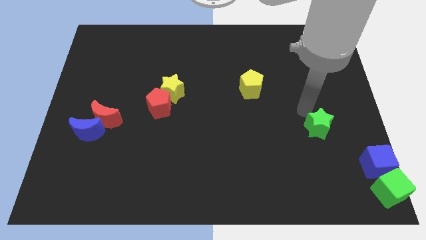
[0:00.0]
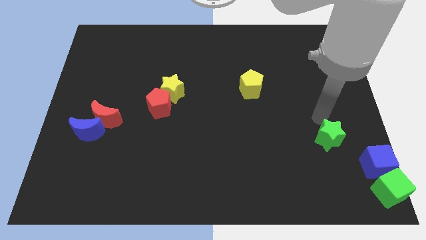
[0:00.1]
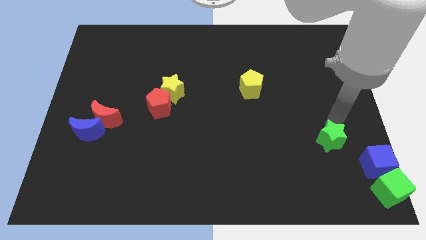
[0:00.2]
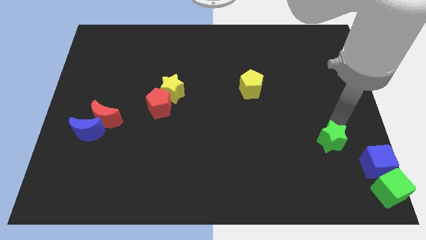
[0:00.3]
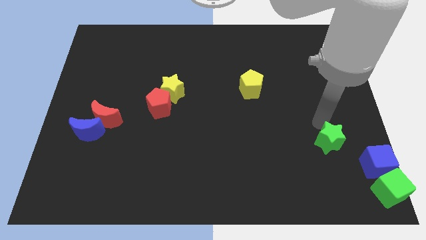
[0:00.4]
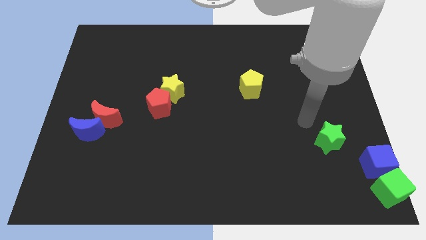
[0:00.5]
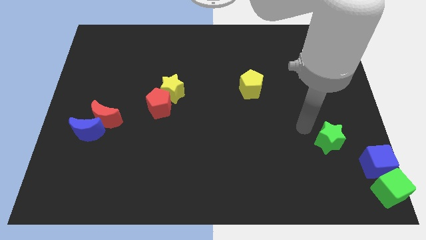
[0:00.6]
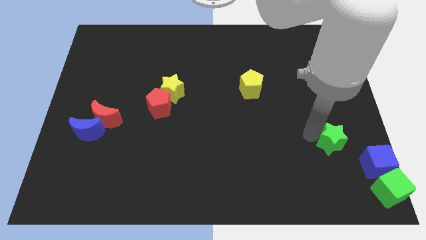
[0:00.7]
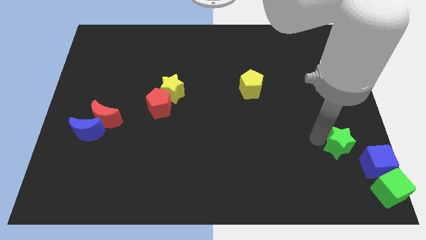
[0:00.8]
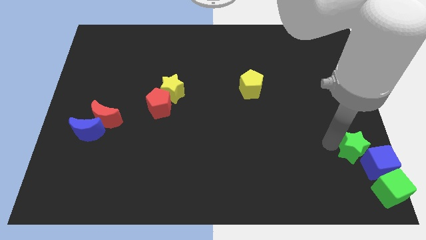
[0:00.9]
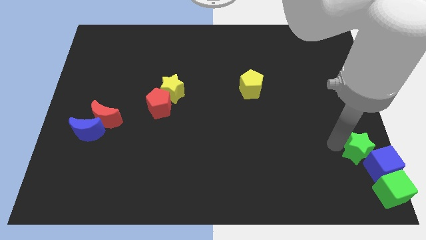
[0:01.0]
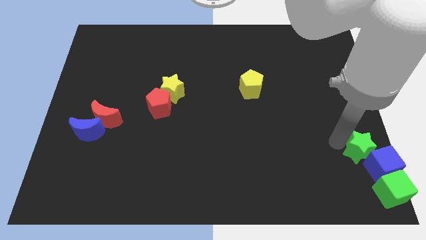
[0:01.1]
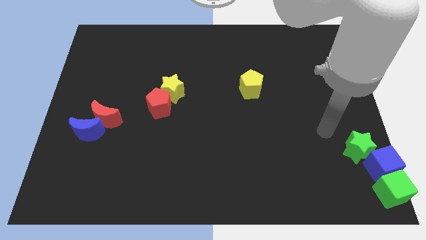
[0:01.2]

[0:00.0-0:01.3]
push the green star to the top left of the blue cube

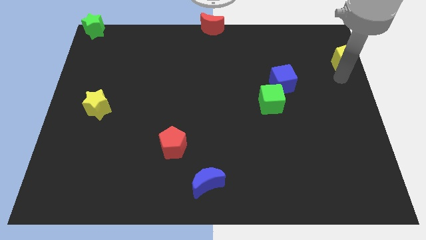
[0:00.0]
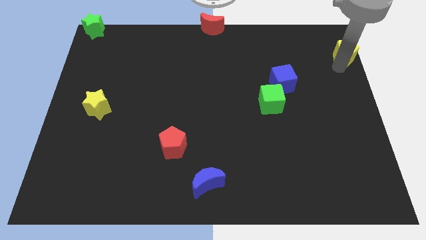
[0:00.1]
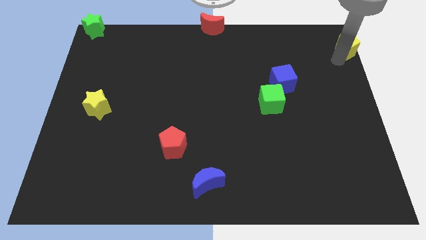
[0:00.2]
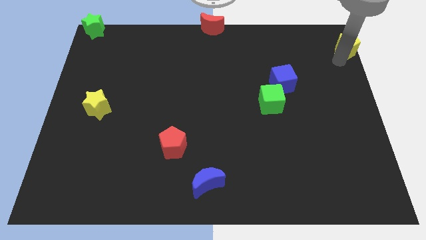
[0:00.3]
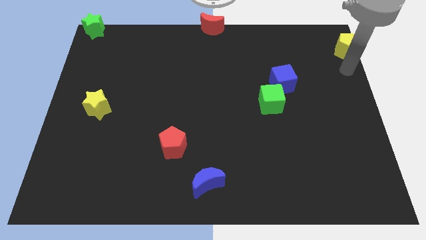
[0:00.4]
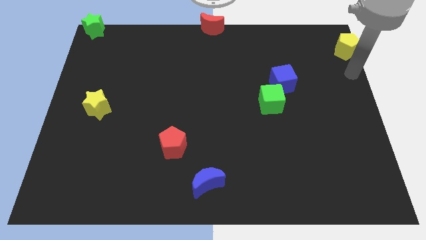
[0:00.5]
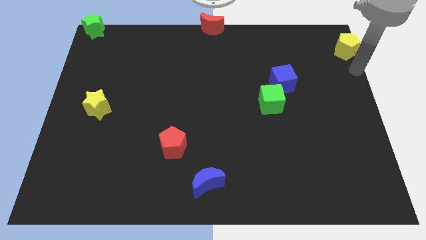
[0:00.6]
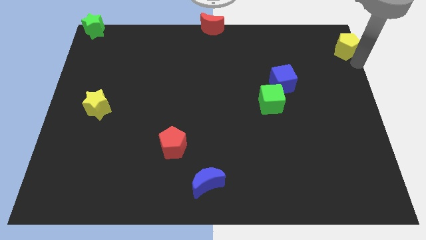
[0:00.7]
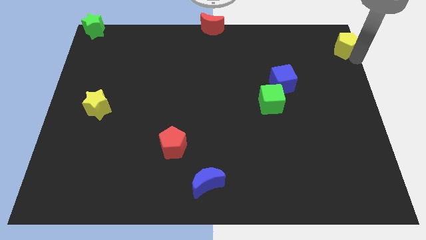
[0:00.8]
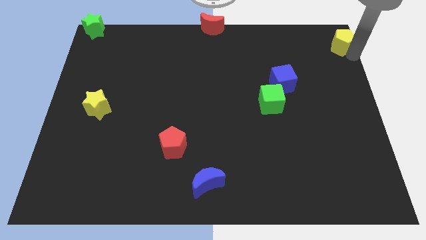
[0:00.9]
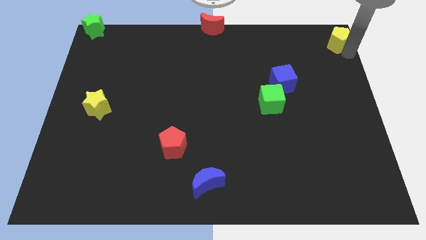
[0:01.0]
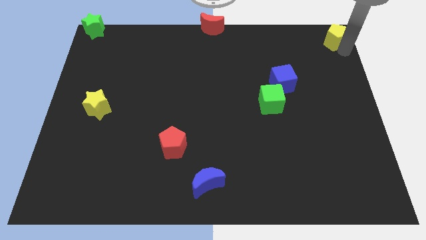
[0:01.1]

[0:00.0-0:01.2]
slide the yellow pentagon to top right

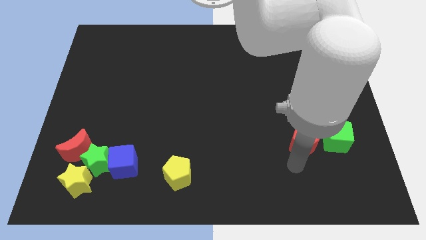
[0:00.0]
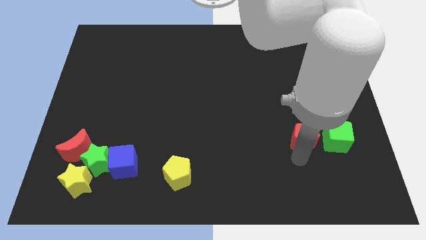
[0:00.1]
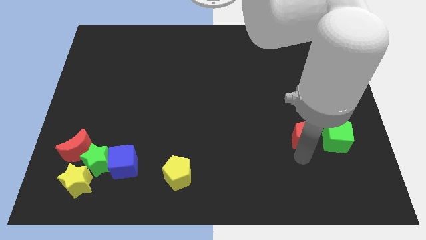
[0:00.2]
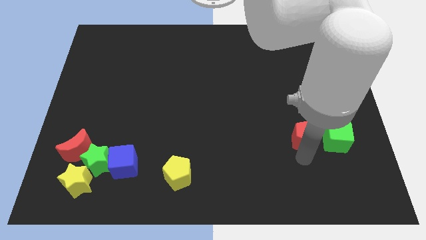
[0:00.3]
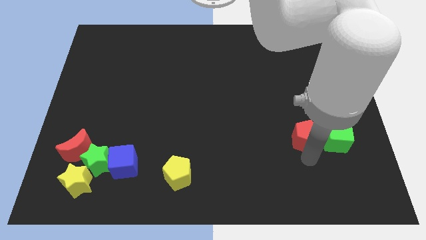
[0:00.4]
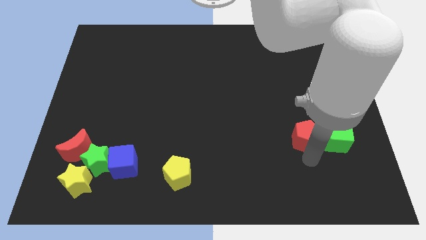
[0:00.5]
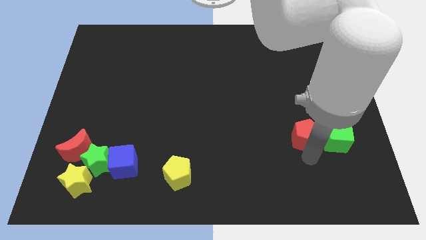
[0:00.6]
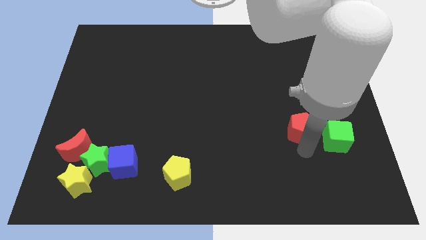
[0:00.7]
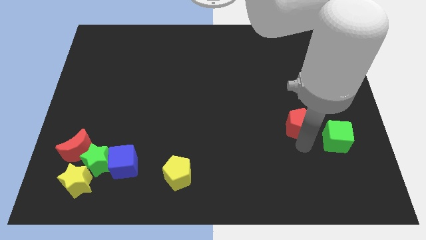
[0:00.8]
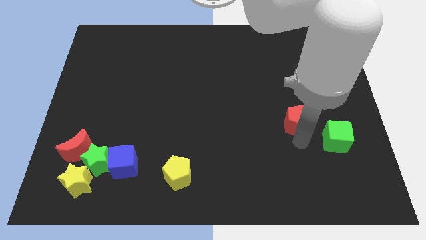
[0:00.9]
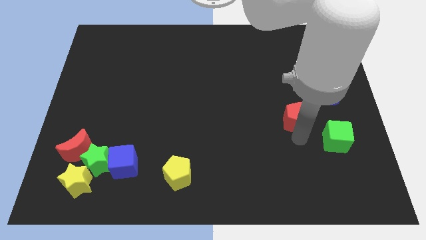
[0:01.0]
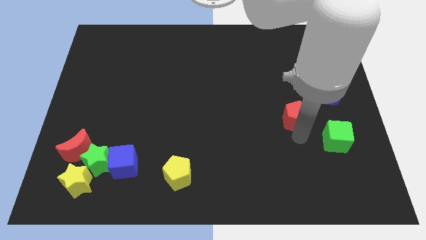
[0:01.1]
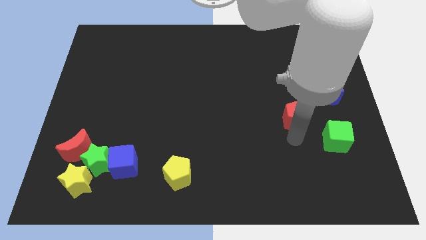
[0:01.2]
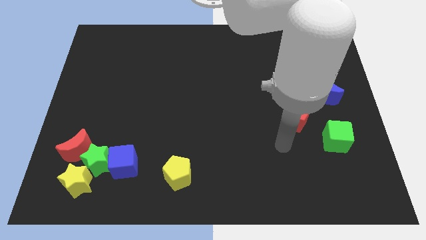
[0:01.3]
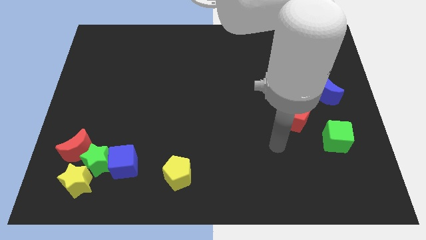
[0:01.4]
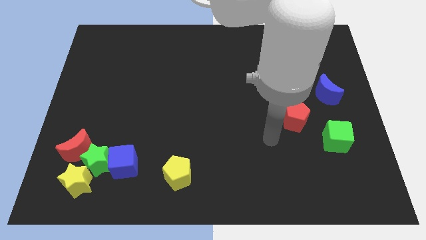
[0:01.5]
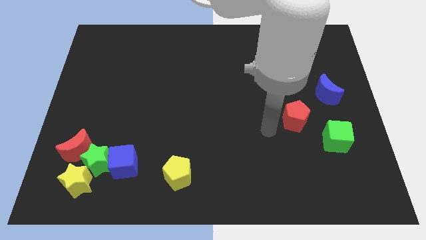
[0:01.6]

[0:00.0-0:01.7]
slide the red pentagon diagonally to the top left of the green cube

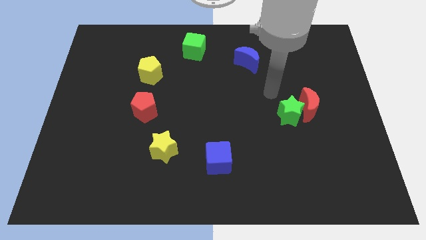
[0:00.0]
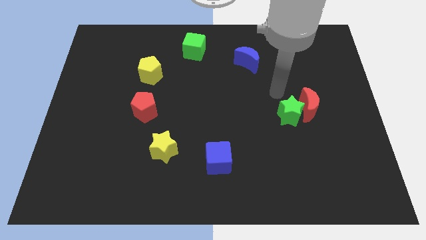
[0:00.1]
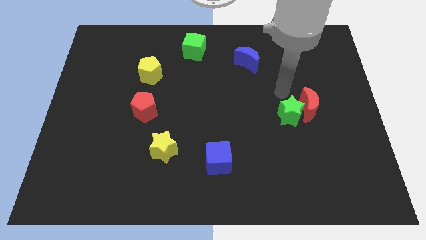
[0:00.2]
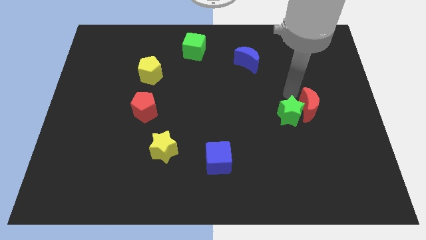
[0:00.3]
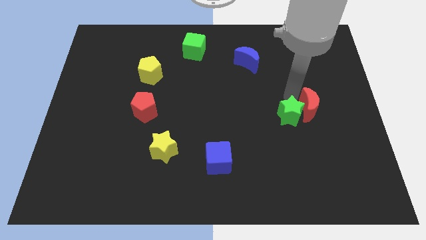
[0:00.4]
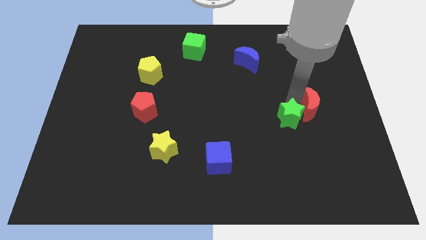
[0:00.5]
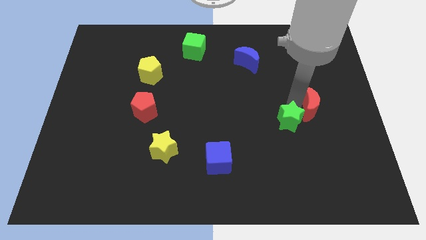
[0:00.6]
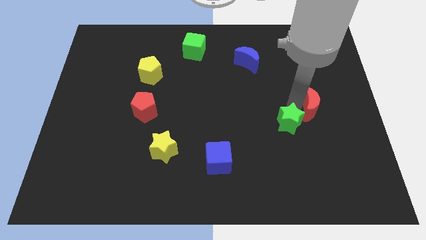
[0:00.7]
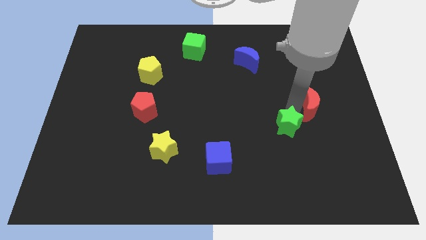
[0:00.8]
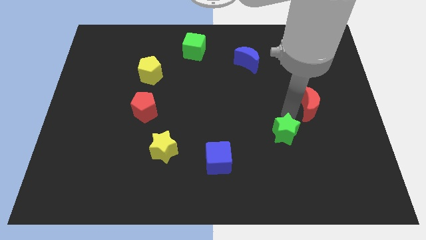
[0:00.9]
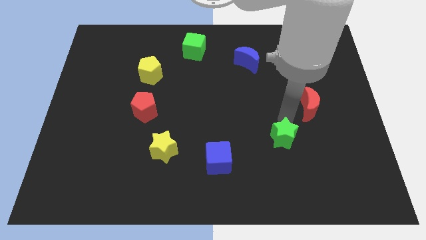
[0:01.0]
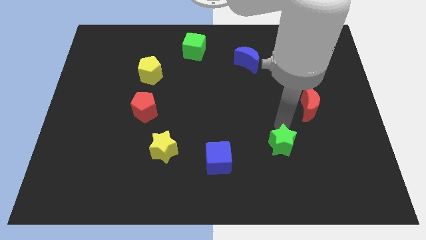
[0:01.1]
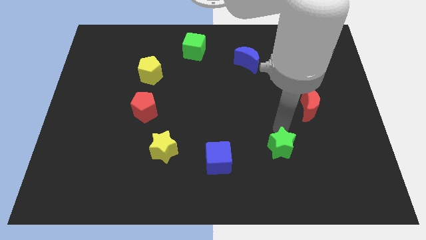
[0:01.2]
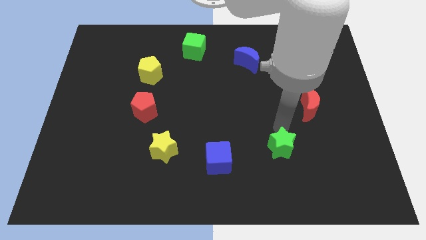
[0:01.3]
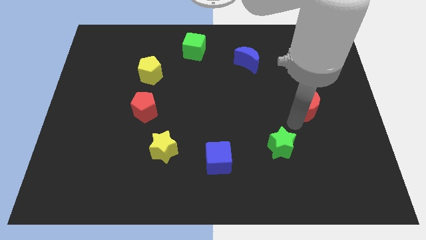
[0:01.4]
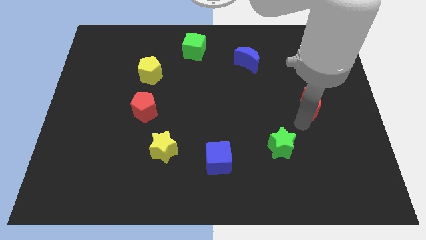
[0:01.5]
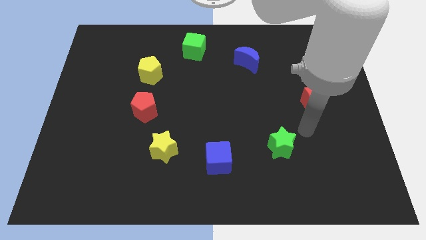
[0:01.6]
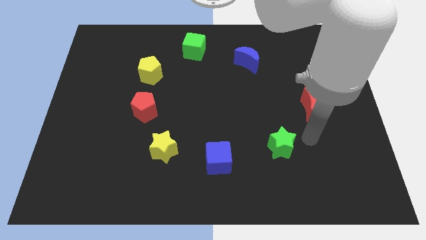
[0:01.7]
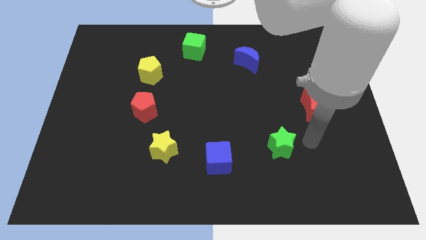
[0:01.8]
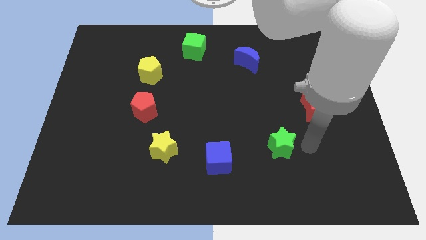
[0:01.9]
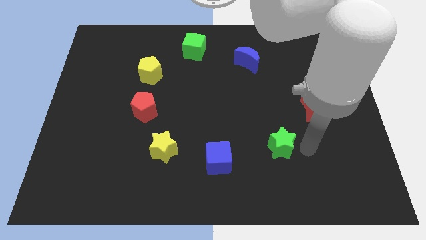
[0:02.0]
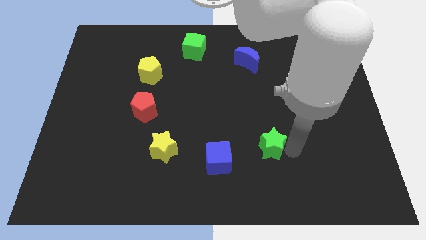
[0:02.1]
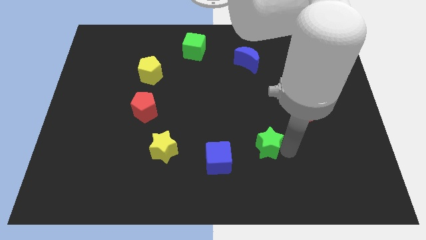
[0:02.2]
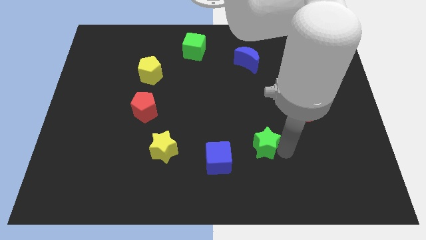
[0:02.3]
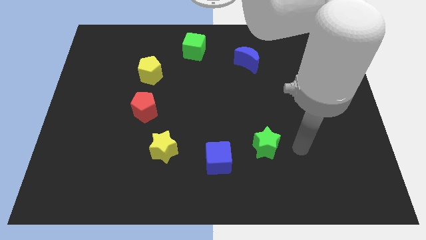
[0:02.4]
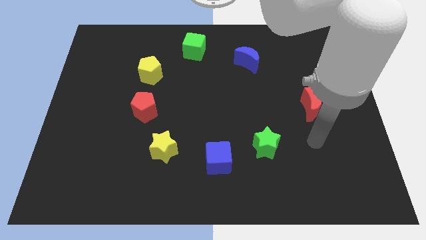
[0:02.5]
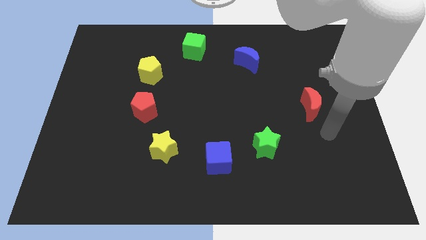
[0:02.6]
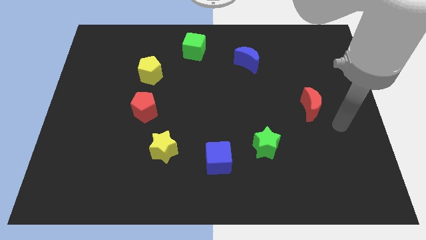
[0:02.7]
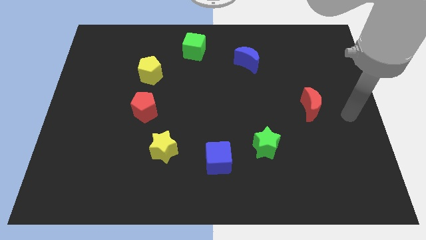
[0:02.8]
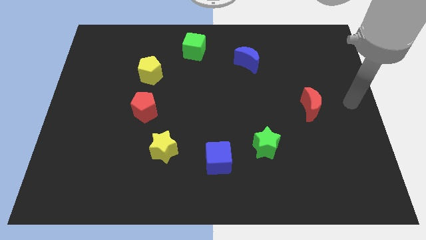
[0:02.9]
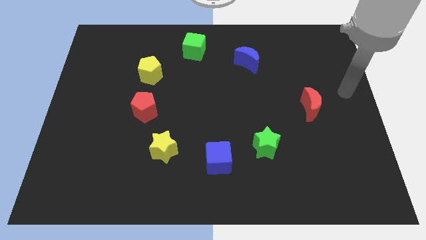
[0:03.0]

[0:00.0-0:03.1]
place the green star to the right of the blue cube

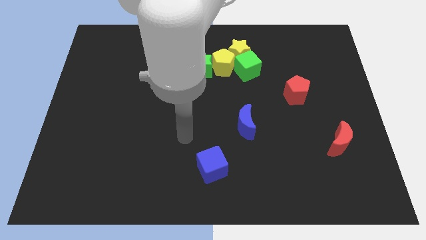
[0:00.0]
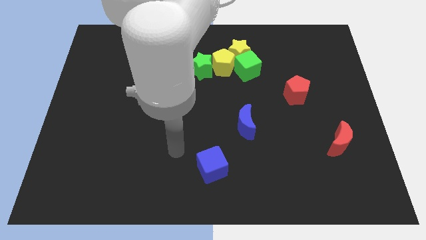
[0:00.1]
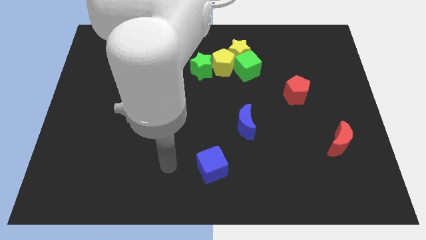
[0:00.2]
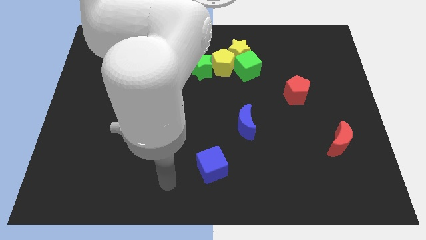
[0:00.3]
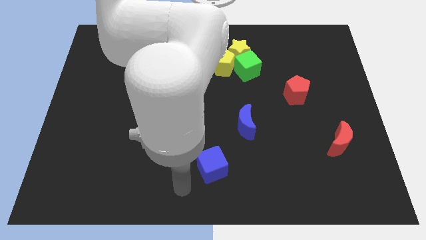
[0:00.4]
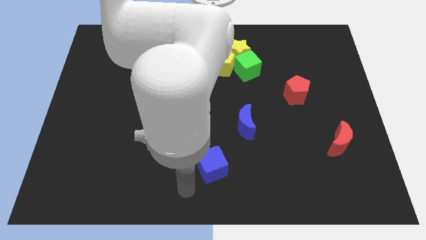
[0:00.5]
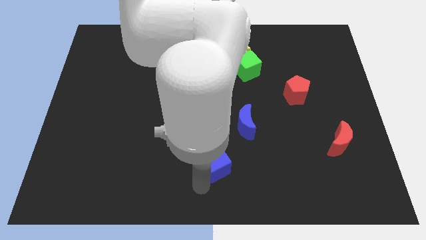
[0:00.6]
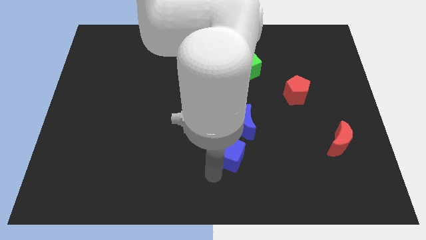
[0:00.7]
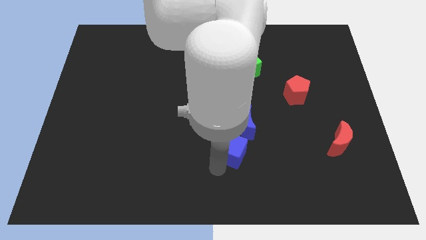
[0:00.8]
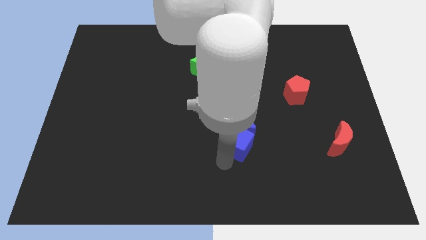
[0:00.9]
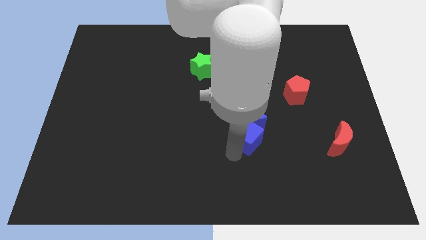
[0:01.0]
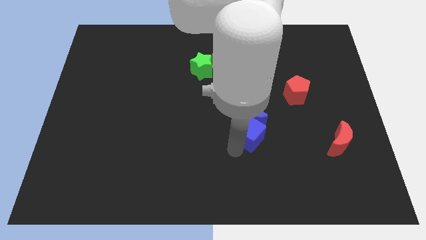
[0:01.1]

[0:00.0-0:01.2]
move the blue cube into the blue crescent

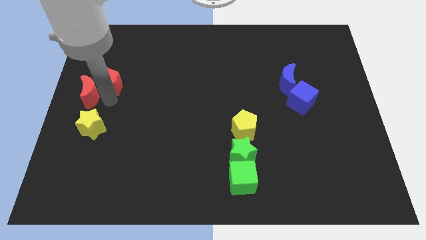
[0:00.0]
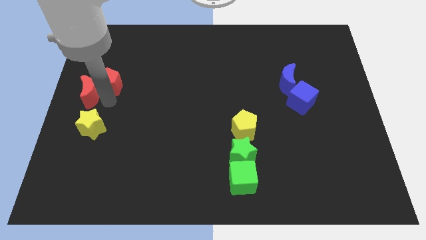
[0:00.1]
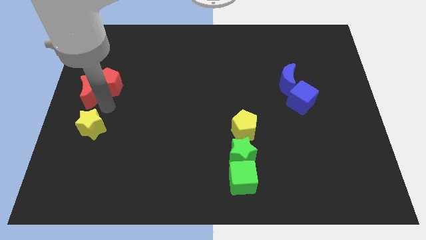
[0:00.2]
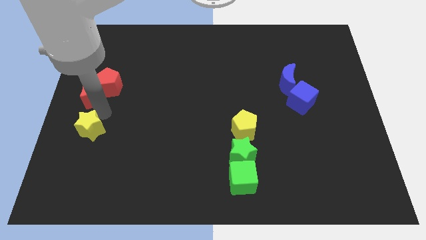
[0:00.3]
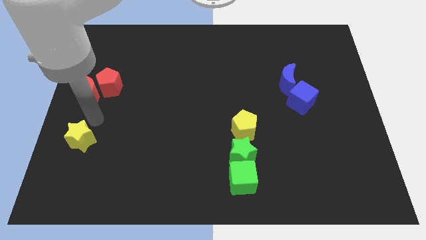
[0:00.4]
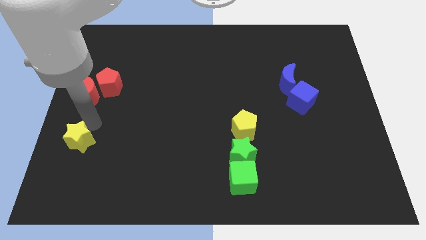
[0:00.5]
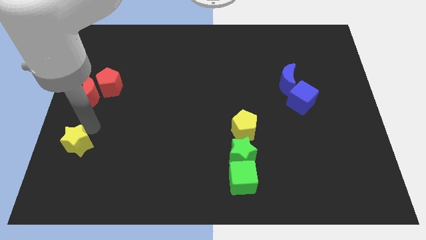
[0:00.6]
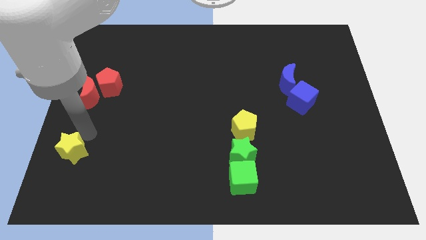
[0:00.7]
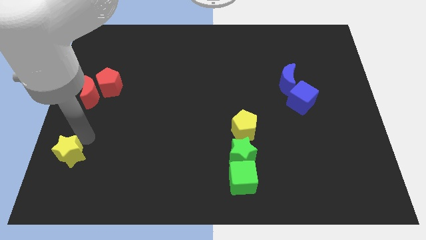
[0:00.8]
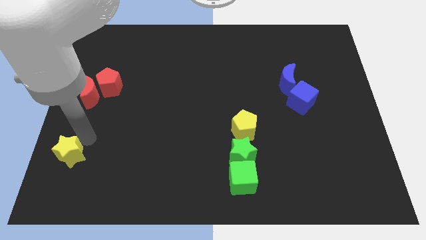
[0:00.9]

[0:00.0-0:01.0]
place the yellow star parallel to the green star
